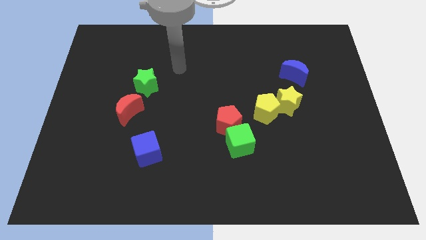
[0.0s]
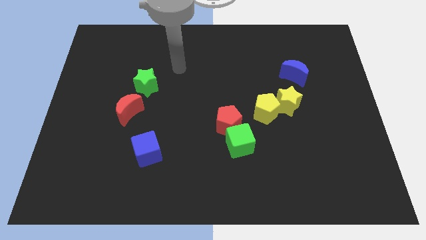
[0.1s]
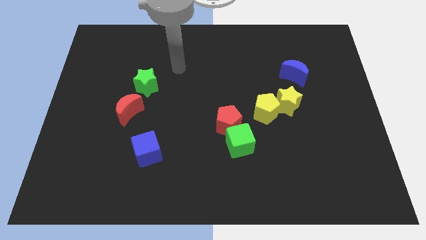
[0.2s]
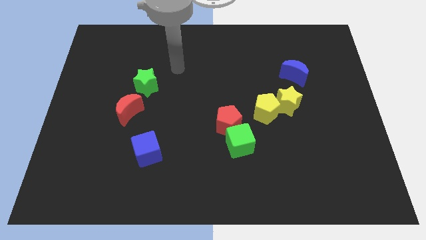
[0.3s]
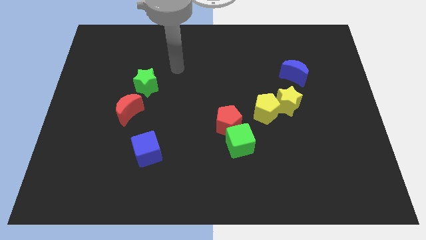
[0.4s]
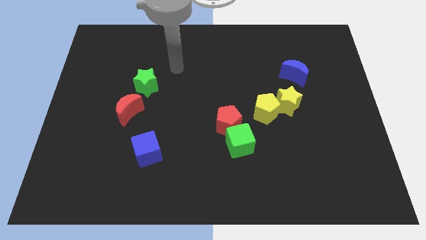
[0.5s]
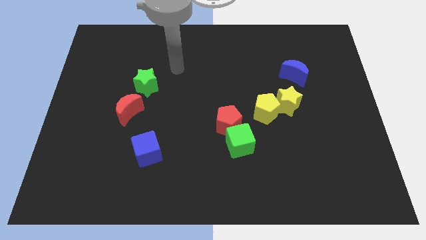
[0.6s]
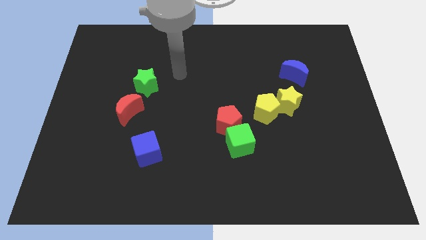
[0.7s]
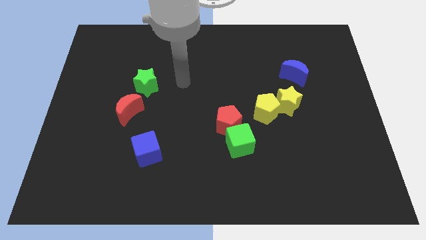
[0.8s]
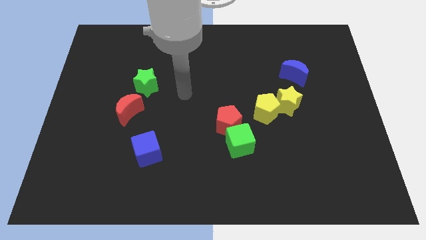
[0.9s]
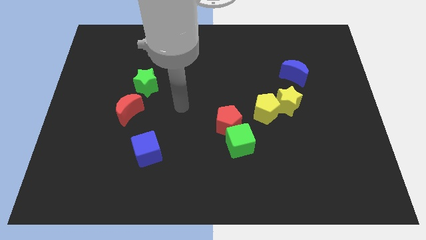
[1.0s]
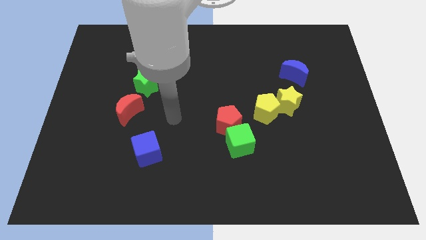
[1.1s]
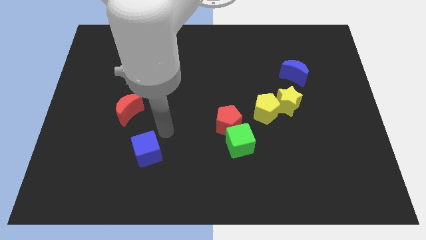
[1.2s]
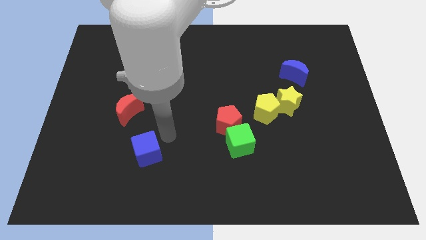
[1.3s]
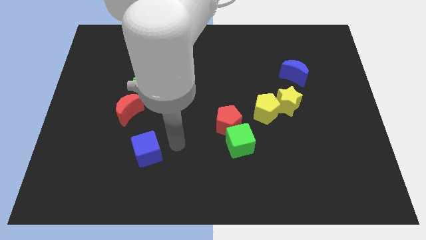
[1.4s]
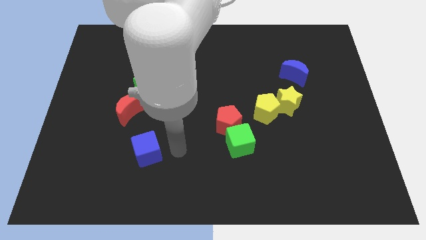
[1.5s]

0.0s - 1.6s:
point your arm at the right side of the blue cube

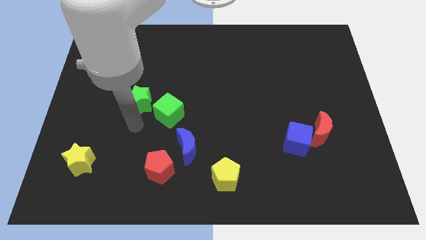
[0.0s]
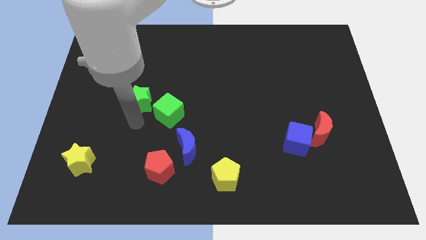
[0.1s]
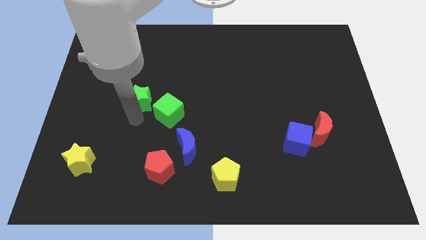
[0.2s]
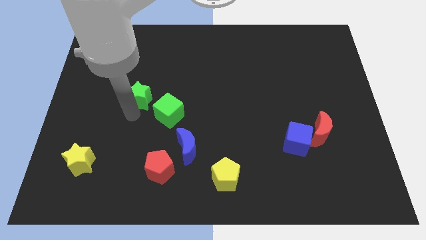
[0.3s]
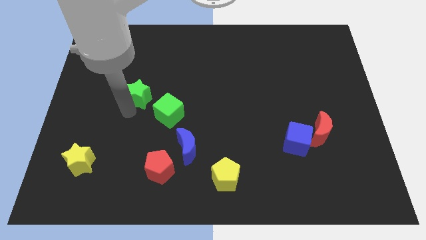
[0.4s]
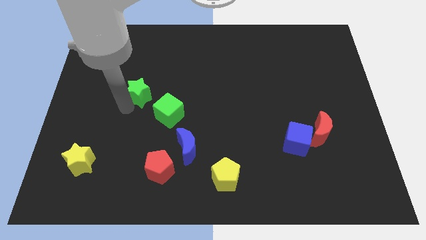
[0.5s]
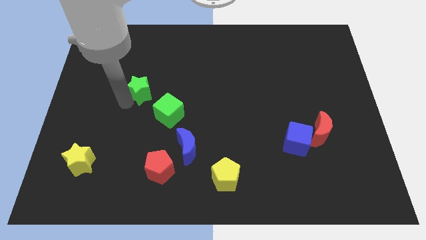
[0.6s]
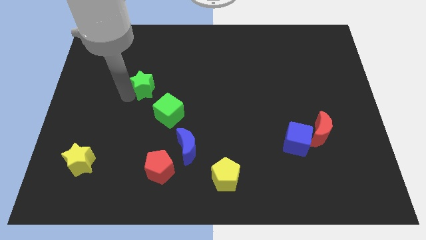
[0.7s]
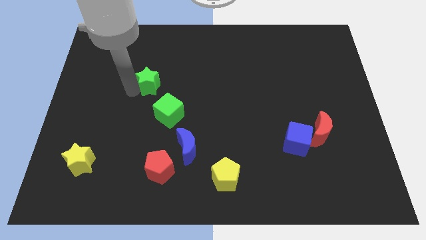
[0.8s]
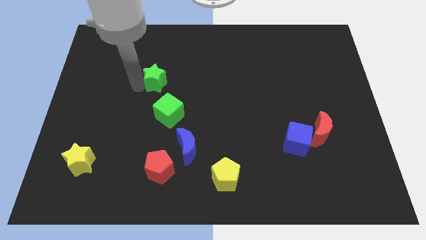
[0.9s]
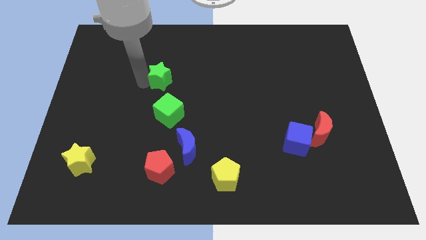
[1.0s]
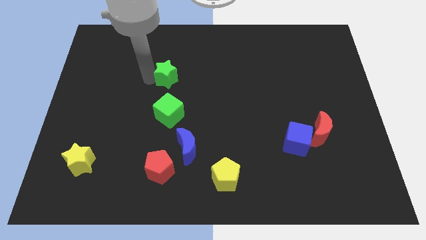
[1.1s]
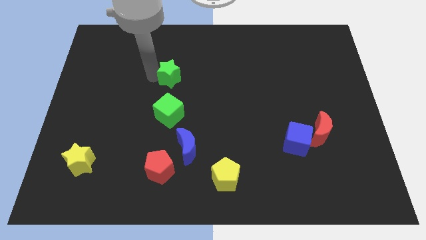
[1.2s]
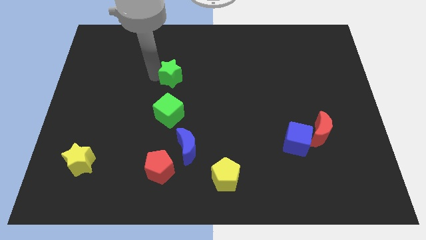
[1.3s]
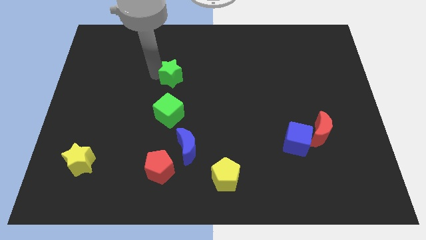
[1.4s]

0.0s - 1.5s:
move the green star above to the green cube

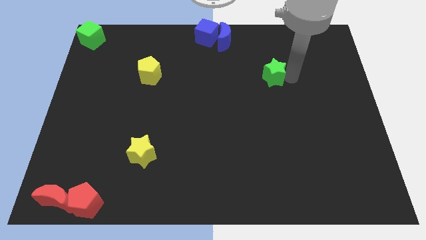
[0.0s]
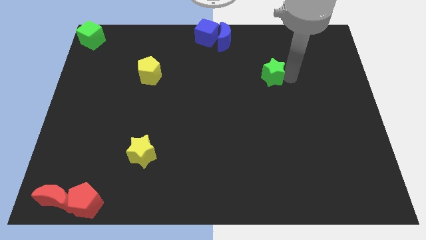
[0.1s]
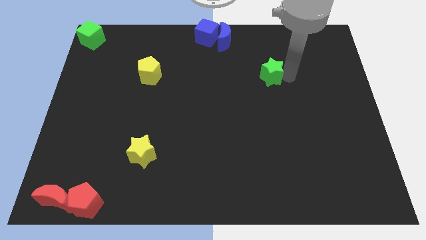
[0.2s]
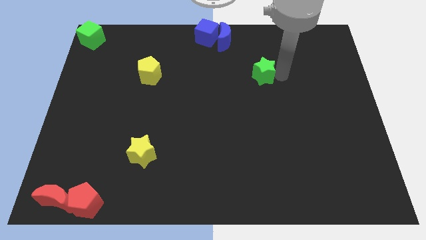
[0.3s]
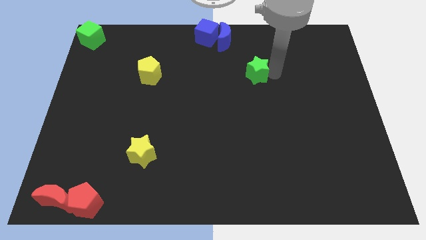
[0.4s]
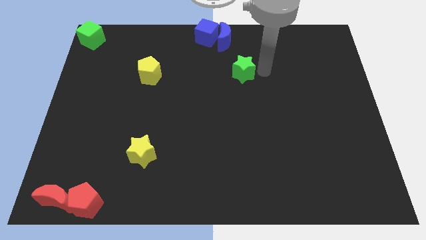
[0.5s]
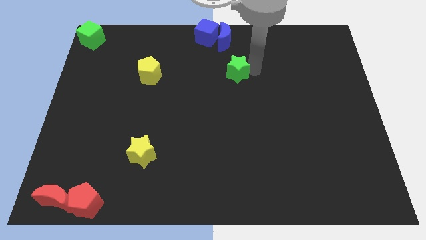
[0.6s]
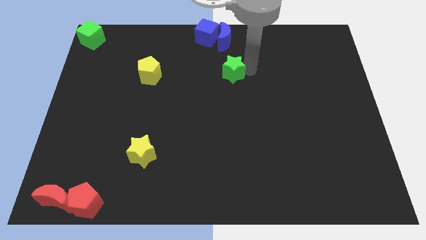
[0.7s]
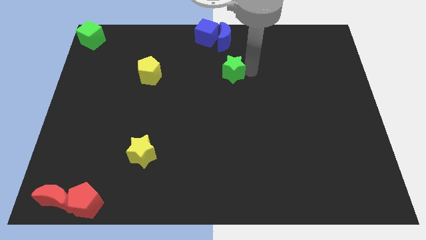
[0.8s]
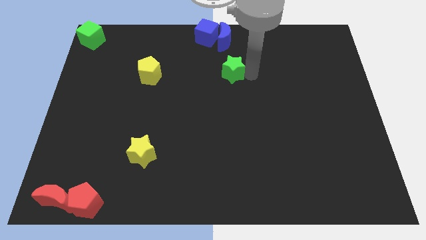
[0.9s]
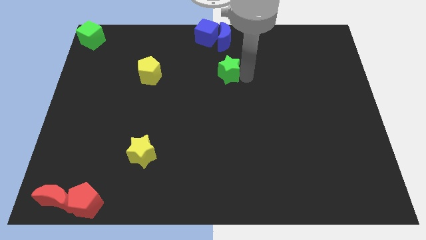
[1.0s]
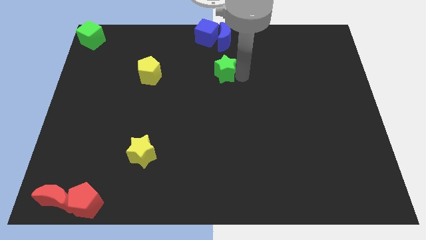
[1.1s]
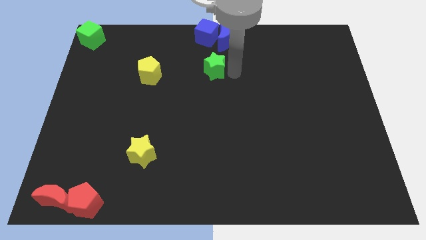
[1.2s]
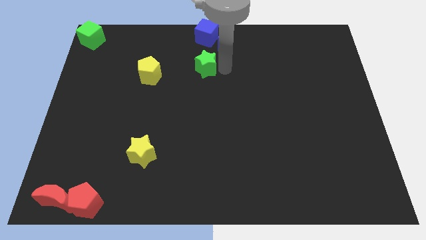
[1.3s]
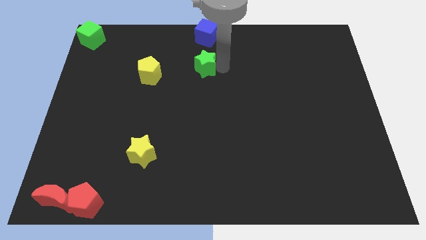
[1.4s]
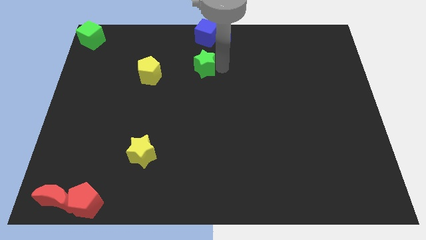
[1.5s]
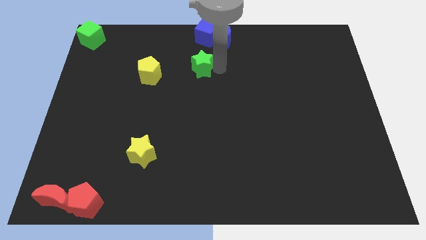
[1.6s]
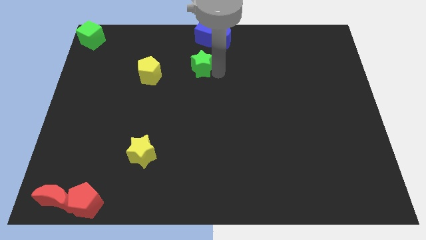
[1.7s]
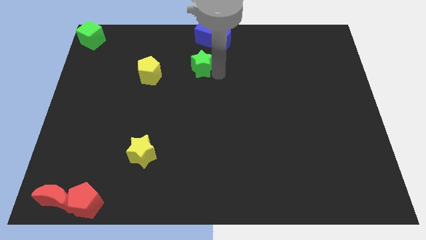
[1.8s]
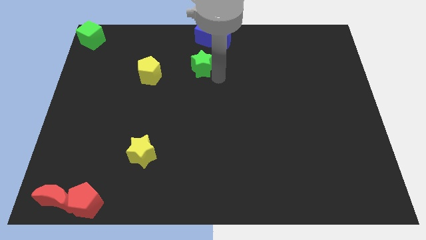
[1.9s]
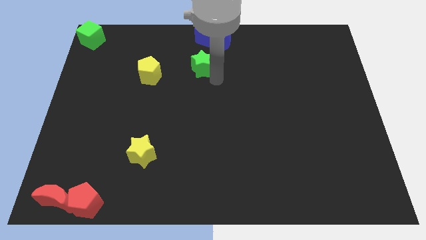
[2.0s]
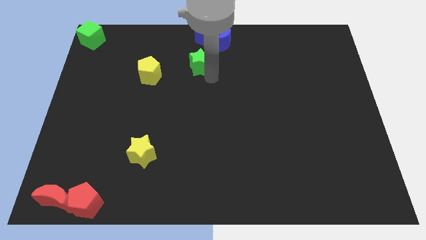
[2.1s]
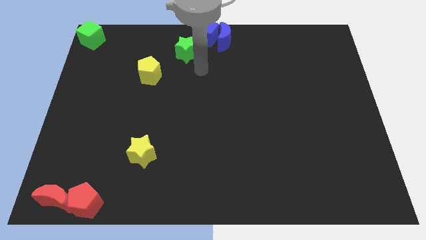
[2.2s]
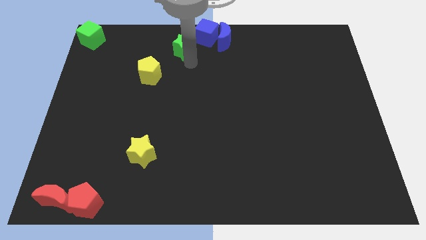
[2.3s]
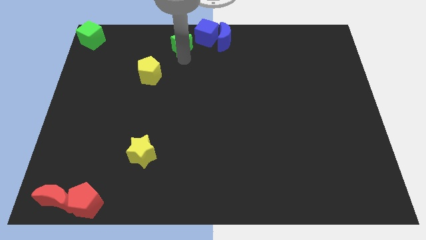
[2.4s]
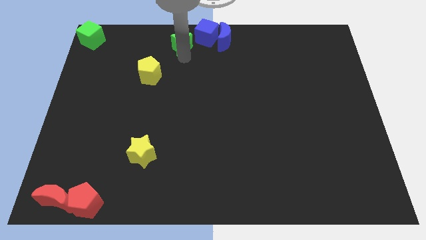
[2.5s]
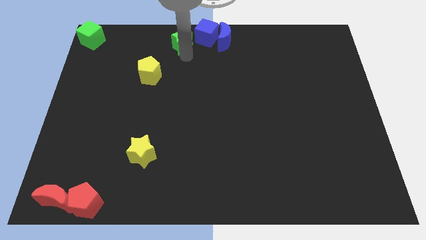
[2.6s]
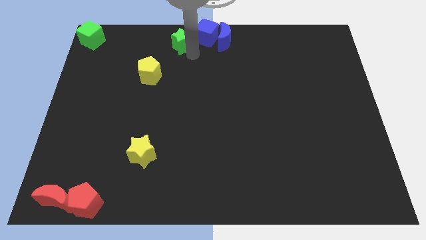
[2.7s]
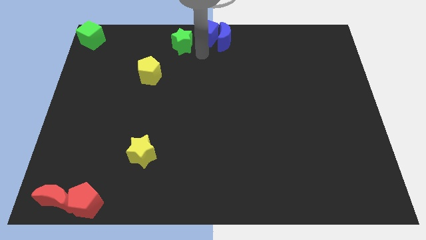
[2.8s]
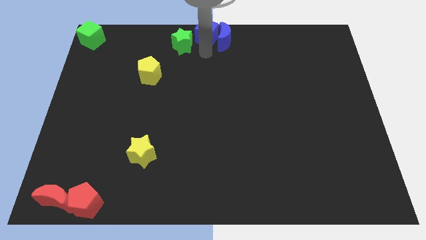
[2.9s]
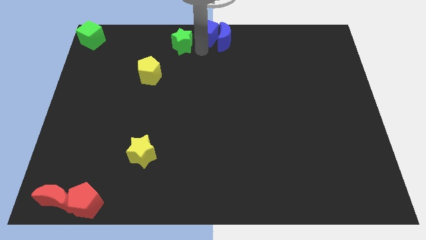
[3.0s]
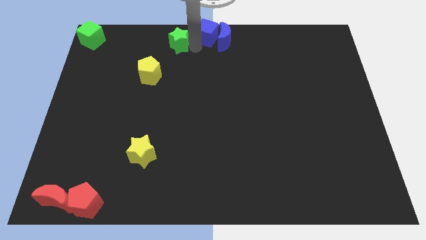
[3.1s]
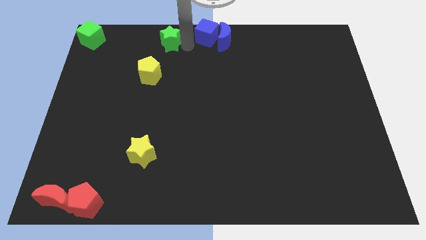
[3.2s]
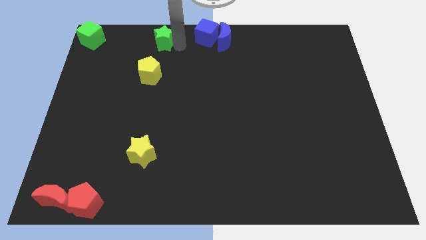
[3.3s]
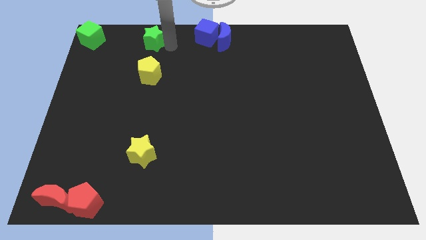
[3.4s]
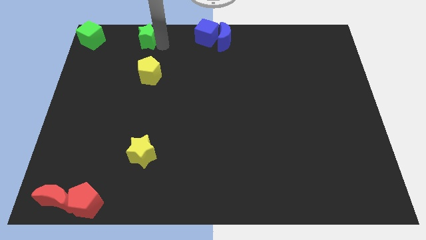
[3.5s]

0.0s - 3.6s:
place the green star vertically above the yellow pentagon

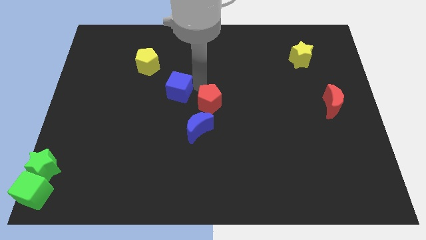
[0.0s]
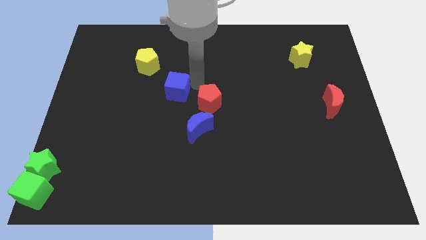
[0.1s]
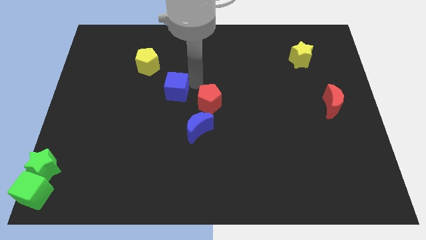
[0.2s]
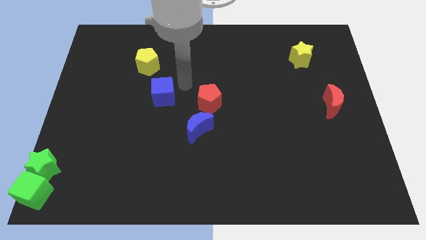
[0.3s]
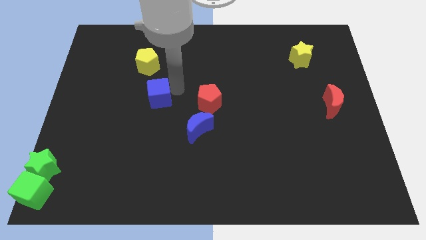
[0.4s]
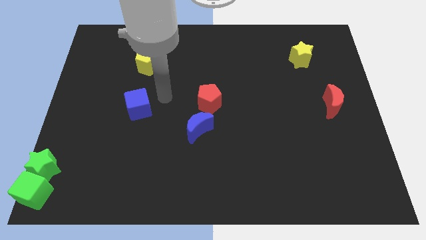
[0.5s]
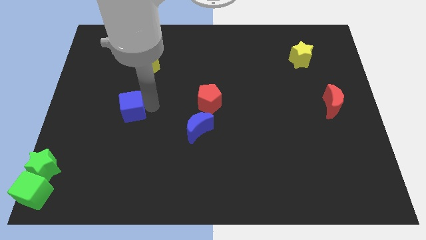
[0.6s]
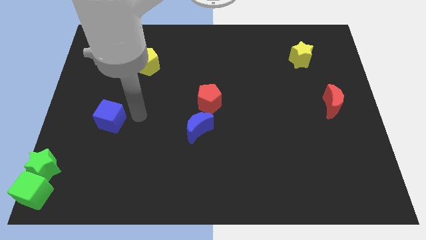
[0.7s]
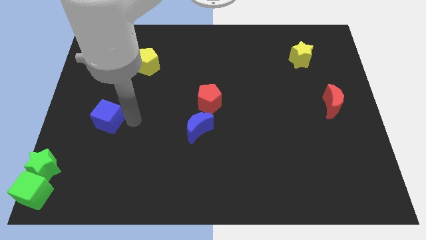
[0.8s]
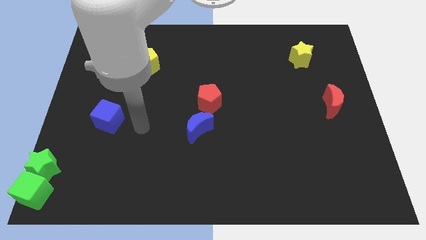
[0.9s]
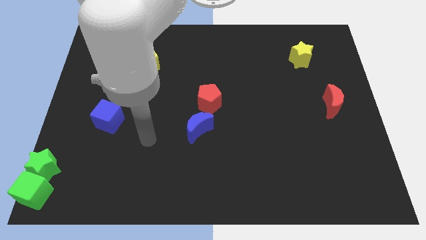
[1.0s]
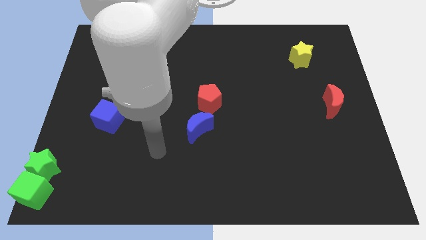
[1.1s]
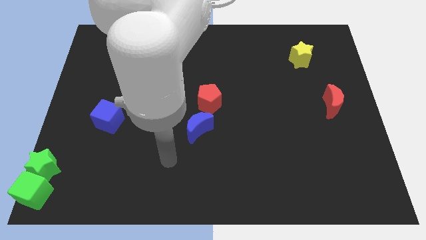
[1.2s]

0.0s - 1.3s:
separate the blue cube from the red pentagon

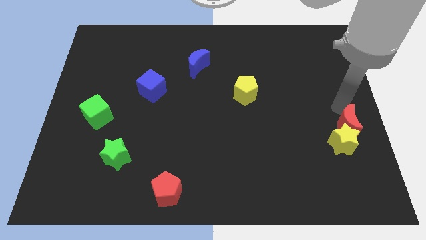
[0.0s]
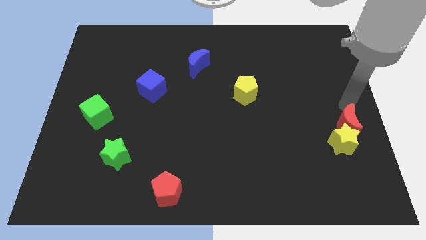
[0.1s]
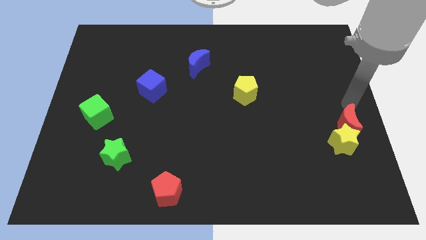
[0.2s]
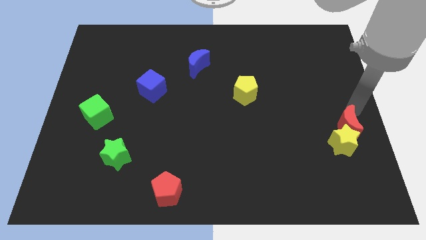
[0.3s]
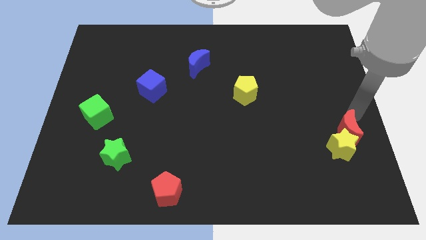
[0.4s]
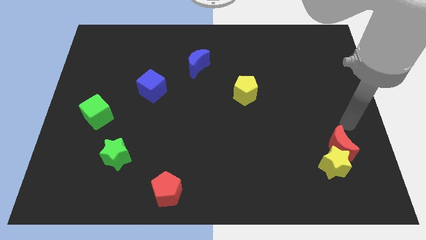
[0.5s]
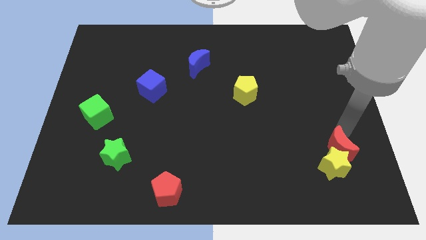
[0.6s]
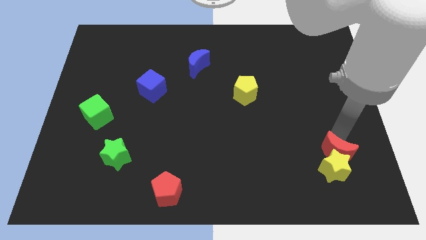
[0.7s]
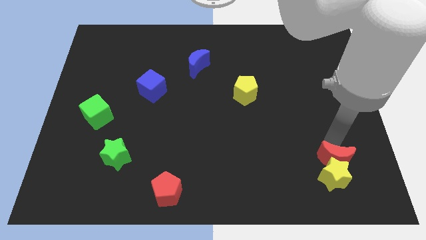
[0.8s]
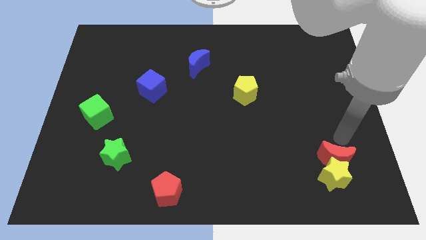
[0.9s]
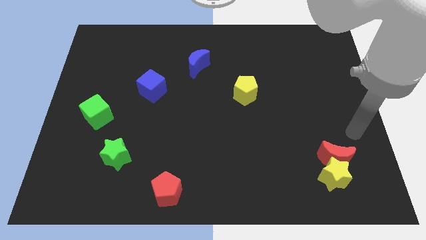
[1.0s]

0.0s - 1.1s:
move the red crescent and the yellow star to the bottom of the board
